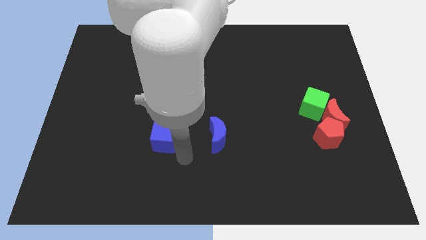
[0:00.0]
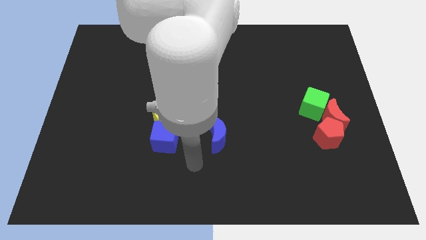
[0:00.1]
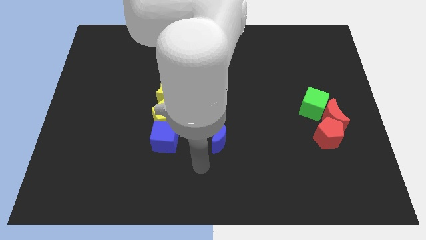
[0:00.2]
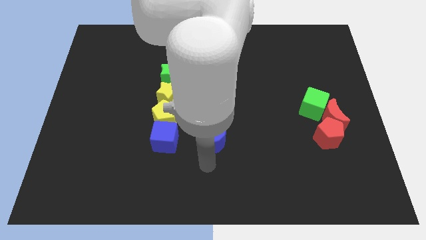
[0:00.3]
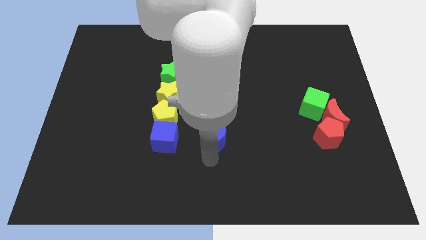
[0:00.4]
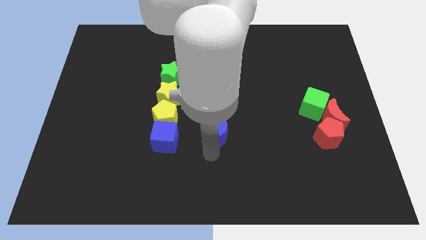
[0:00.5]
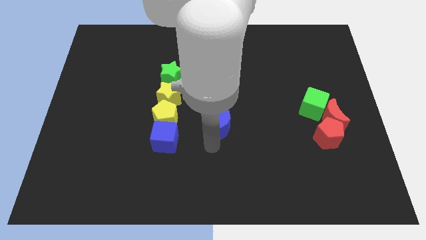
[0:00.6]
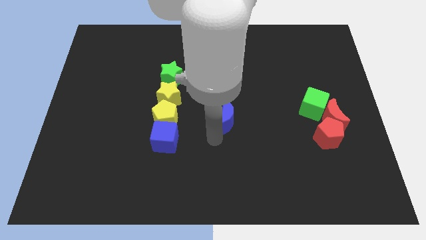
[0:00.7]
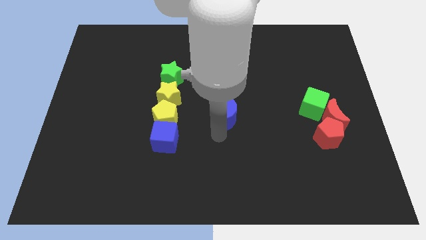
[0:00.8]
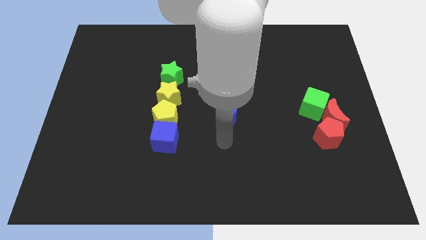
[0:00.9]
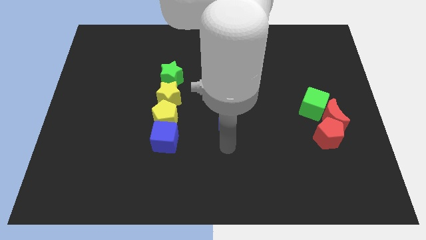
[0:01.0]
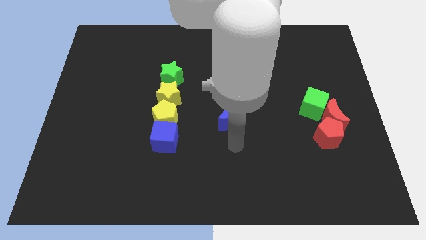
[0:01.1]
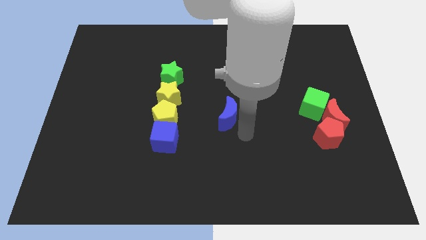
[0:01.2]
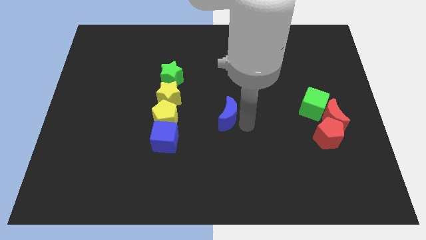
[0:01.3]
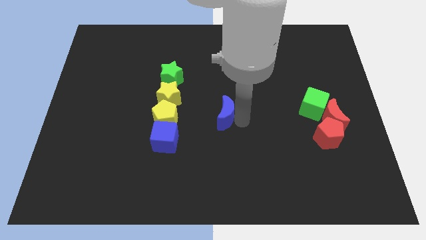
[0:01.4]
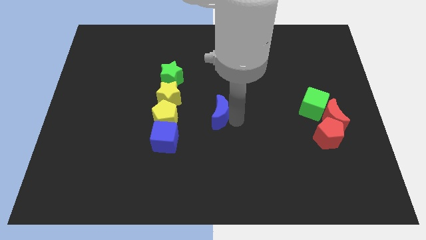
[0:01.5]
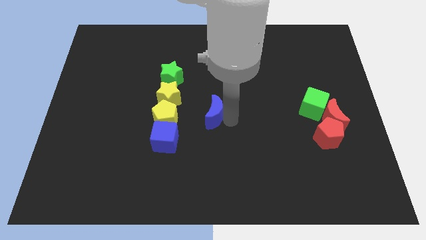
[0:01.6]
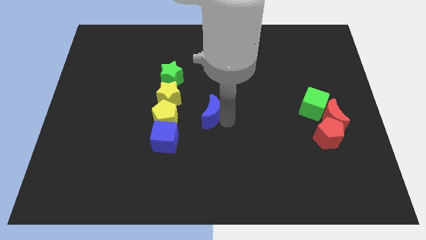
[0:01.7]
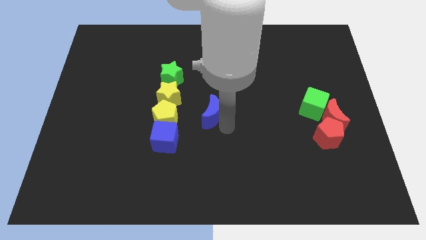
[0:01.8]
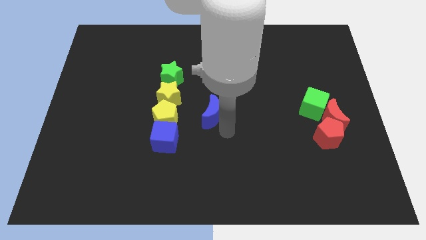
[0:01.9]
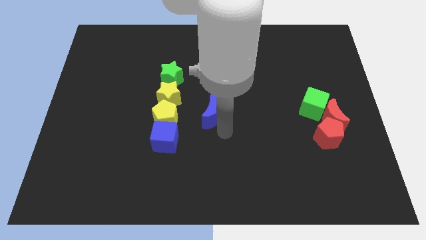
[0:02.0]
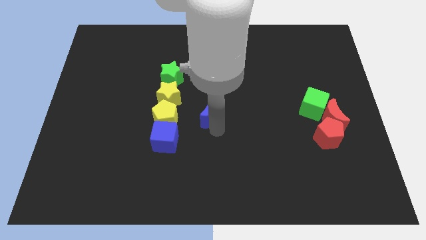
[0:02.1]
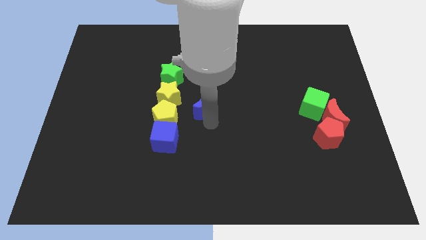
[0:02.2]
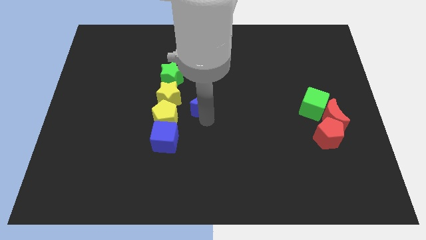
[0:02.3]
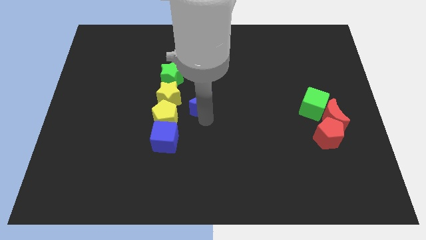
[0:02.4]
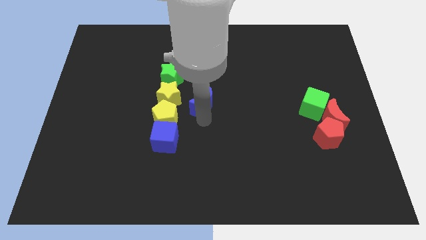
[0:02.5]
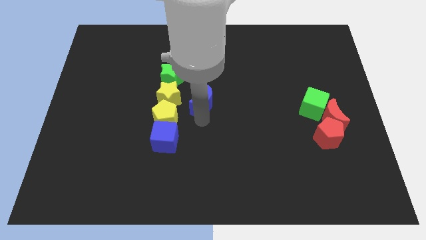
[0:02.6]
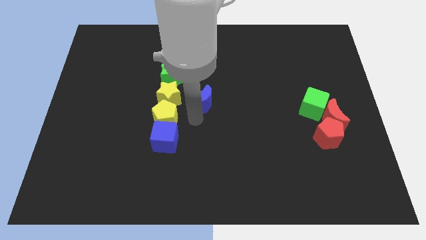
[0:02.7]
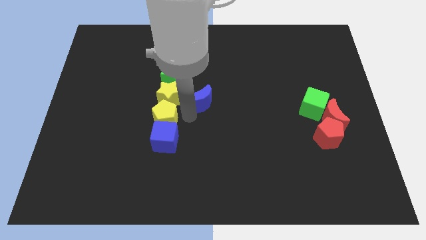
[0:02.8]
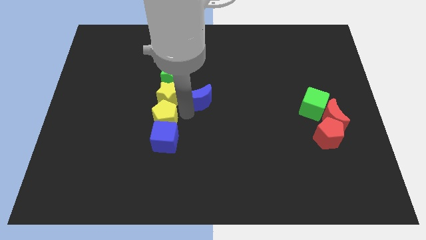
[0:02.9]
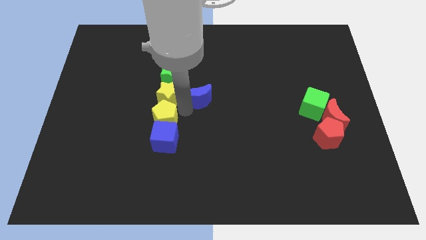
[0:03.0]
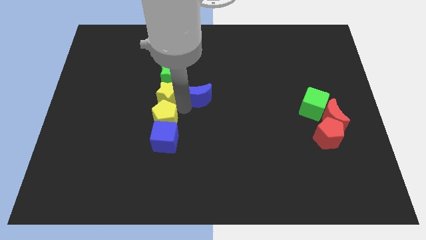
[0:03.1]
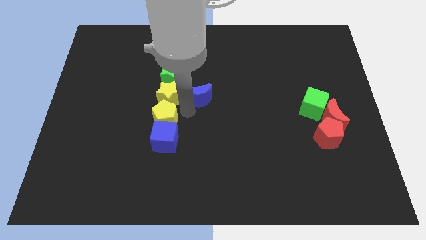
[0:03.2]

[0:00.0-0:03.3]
place the blue moon right to the yellow star

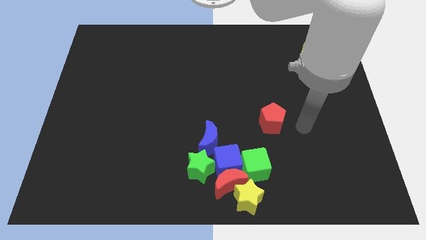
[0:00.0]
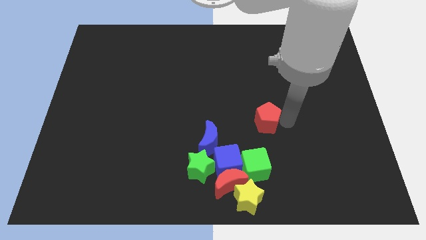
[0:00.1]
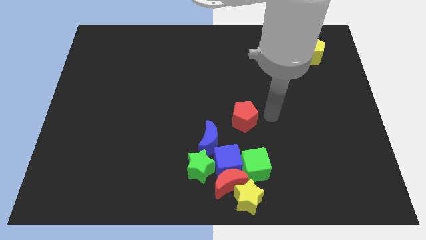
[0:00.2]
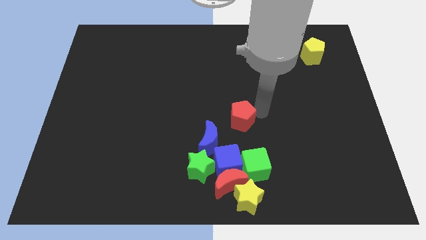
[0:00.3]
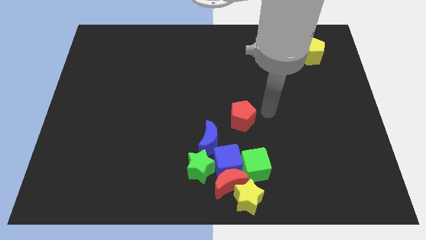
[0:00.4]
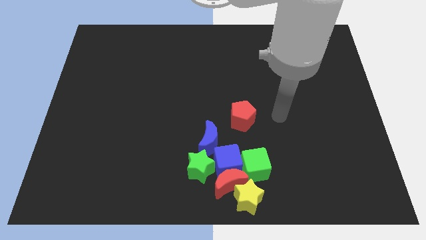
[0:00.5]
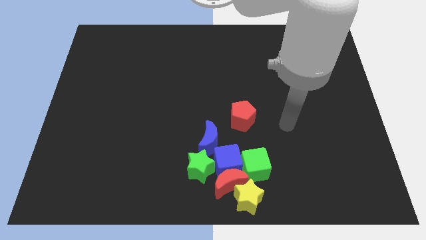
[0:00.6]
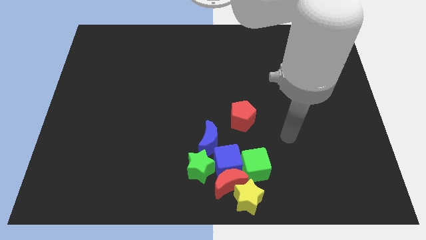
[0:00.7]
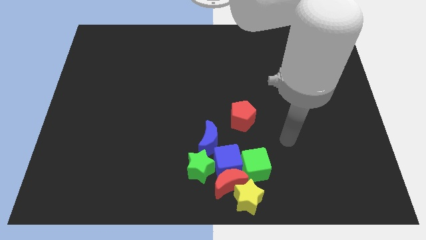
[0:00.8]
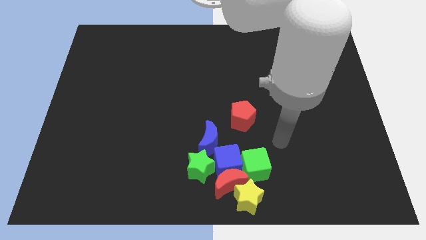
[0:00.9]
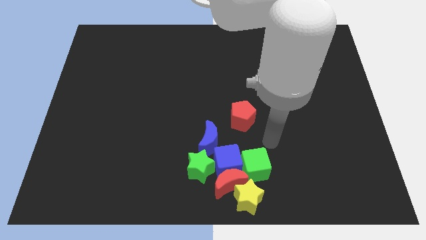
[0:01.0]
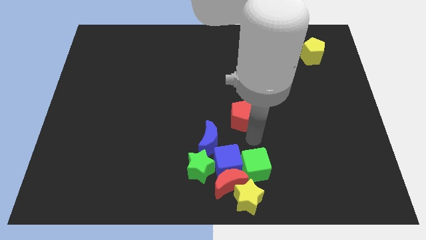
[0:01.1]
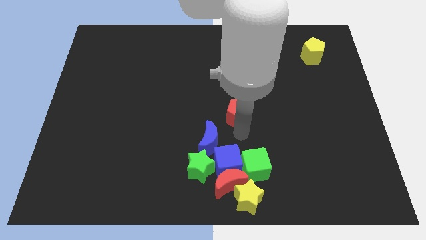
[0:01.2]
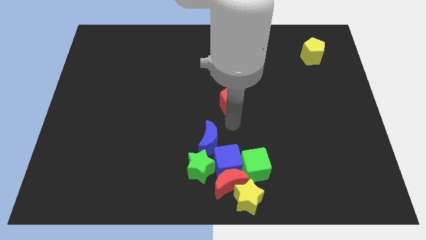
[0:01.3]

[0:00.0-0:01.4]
place the red pentagon at the center of the board

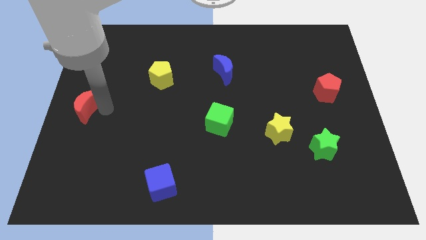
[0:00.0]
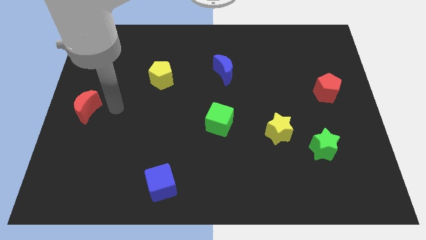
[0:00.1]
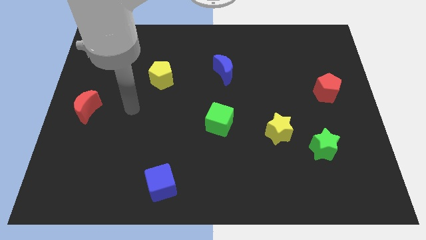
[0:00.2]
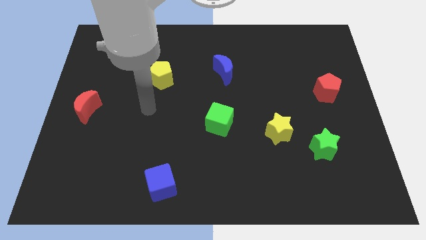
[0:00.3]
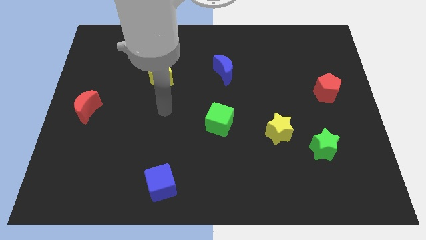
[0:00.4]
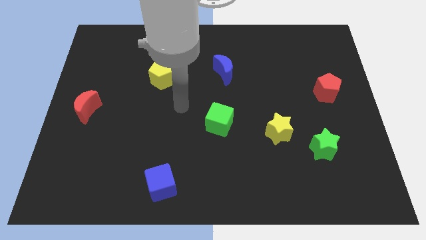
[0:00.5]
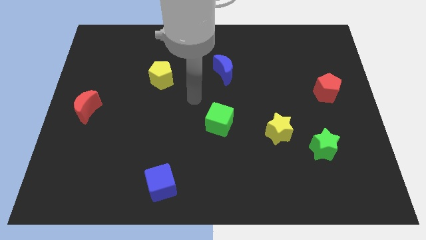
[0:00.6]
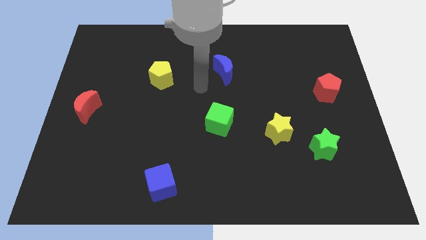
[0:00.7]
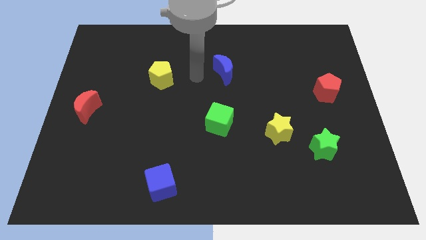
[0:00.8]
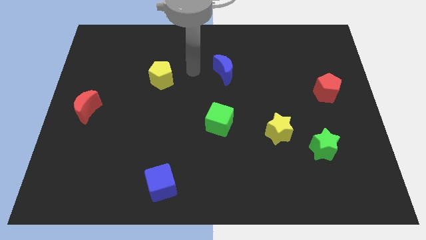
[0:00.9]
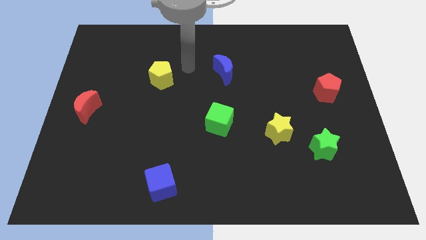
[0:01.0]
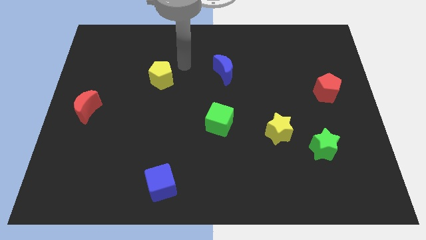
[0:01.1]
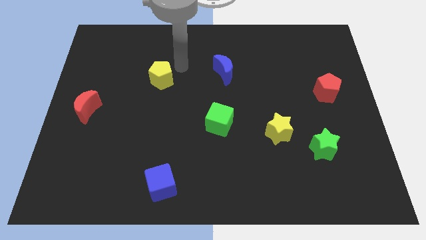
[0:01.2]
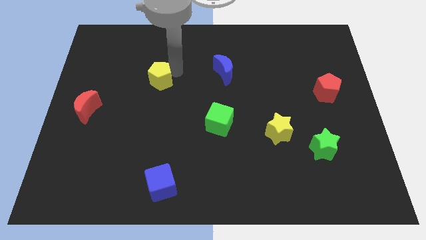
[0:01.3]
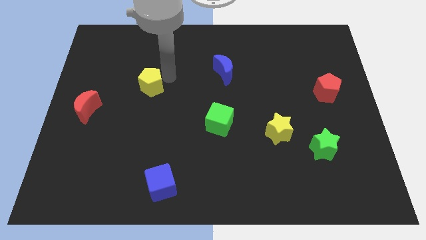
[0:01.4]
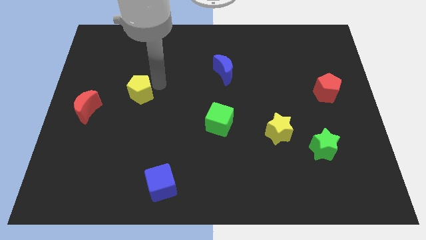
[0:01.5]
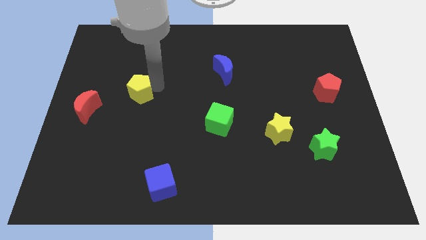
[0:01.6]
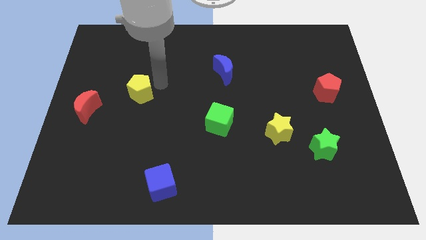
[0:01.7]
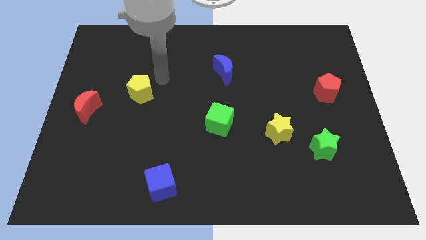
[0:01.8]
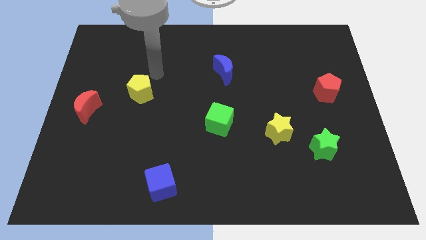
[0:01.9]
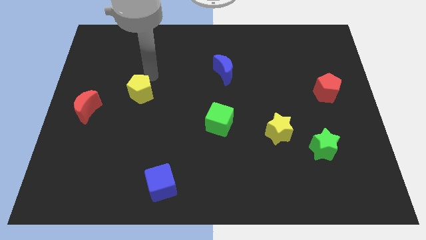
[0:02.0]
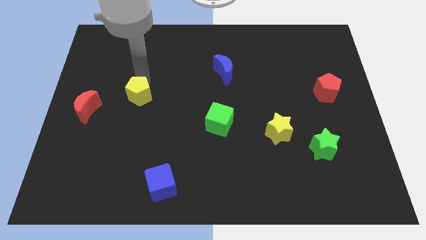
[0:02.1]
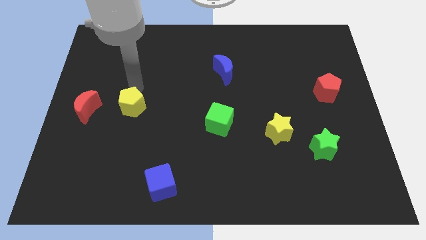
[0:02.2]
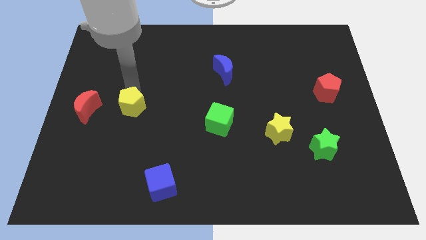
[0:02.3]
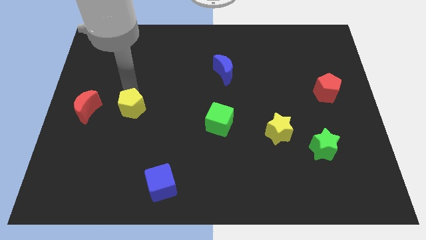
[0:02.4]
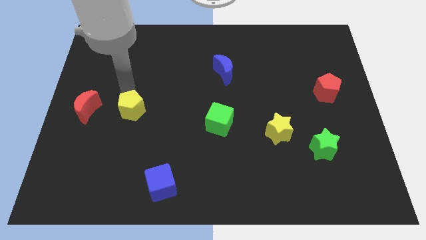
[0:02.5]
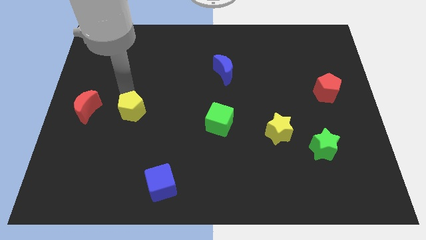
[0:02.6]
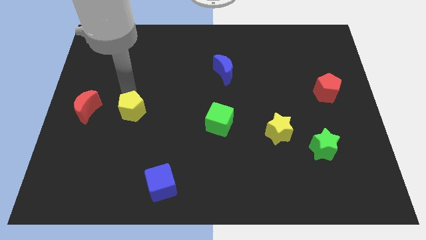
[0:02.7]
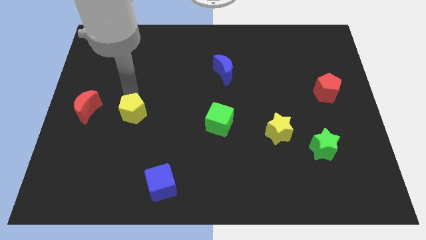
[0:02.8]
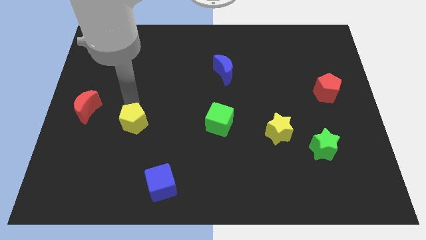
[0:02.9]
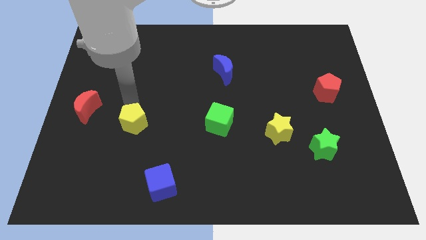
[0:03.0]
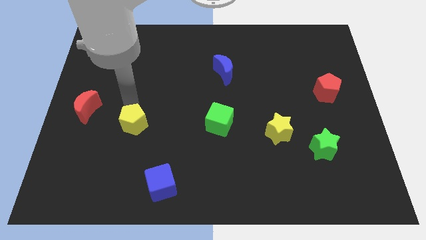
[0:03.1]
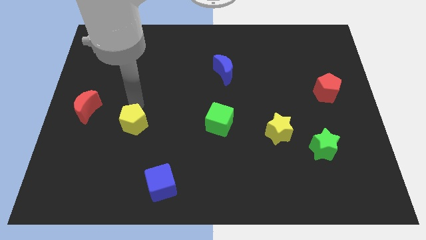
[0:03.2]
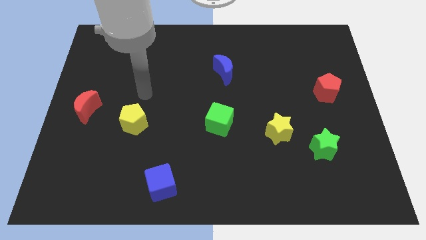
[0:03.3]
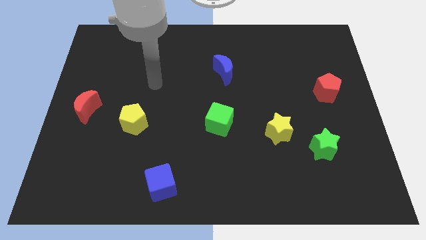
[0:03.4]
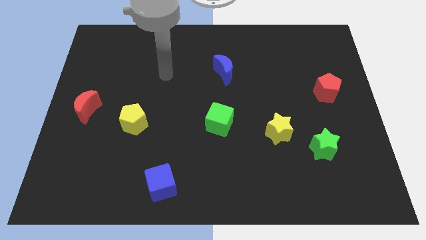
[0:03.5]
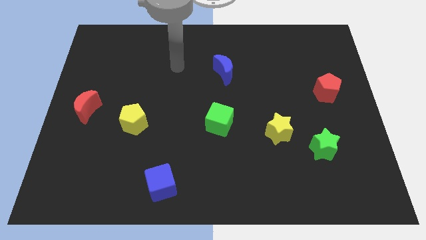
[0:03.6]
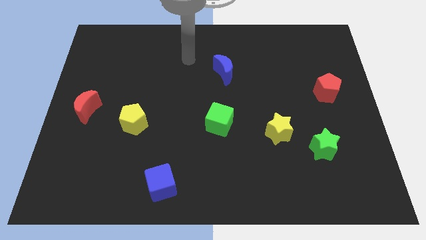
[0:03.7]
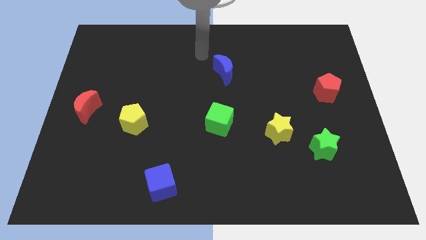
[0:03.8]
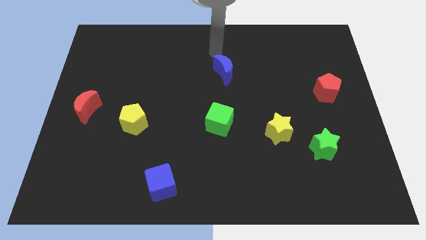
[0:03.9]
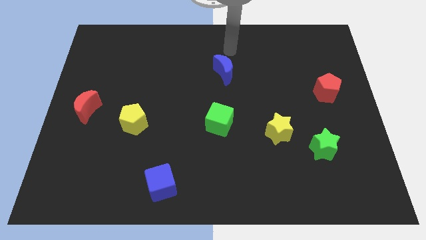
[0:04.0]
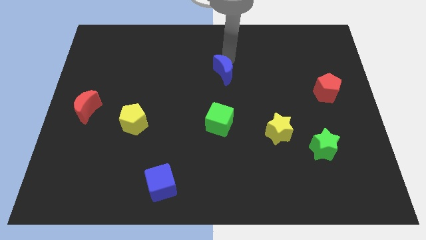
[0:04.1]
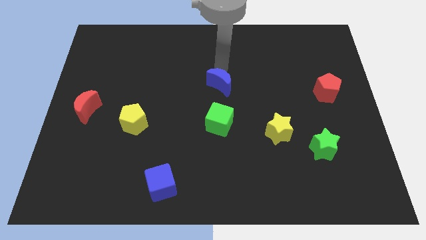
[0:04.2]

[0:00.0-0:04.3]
place yellow pentagon to the left of green cube

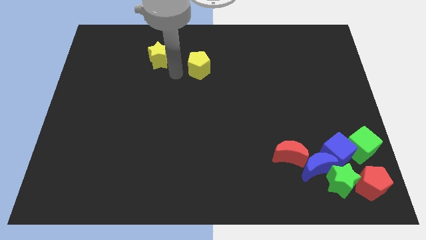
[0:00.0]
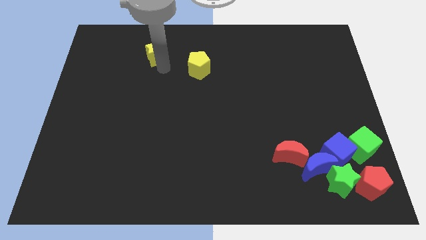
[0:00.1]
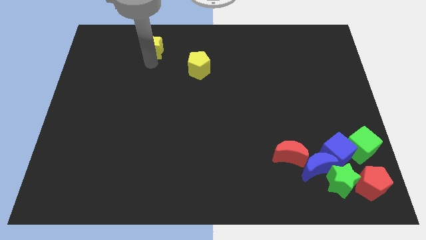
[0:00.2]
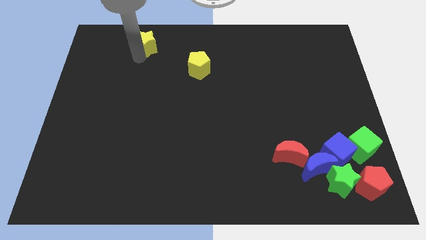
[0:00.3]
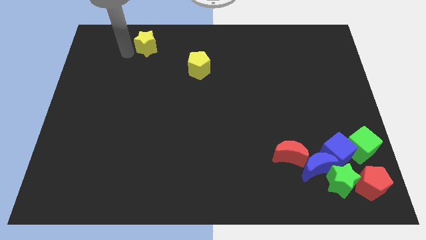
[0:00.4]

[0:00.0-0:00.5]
move the yellow star to the left to the yellow pentagon
